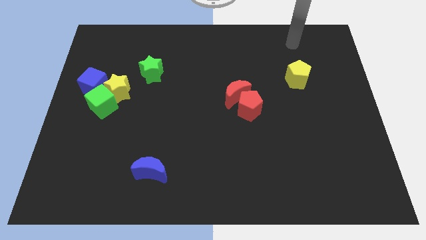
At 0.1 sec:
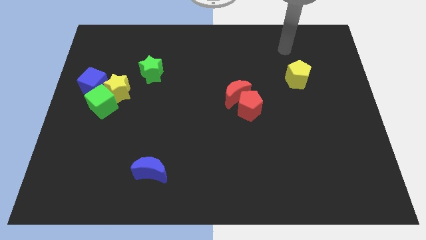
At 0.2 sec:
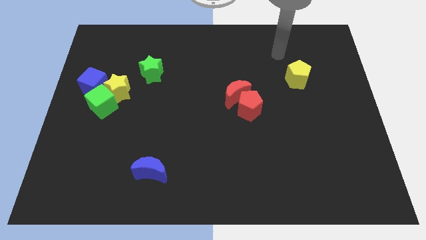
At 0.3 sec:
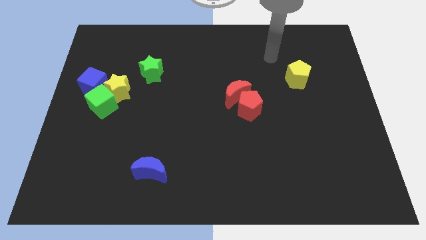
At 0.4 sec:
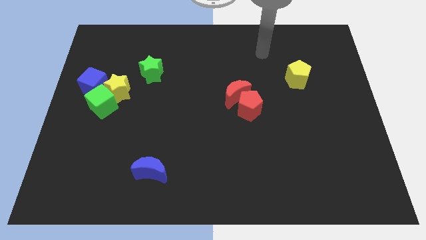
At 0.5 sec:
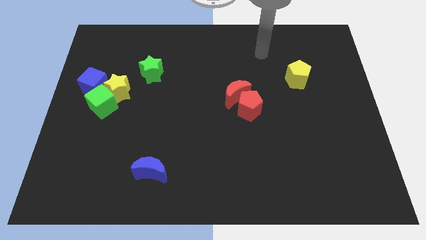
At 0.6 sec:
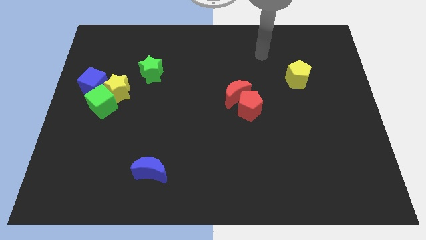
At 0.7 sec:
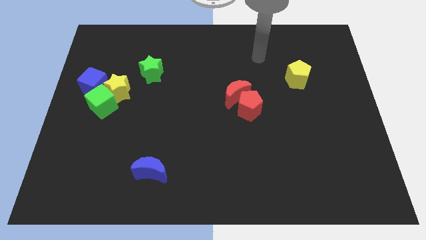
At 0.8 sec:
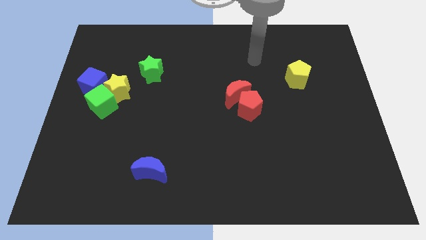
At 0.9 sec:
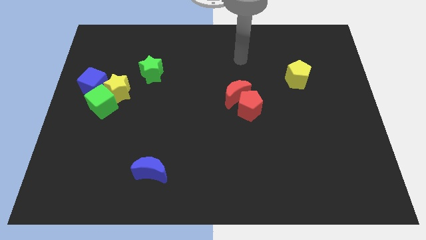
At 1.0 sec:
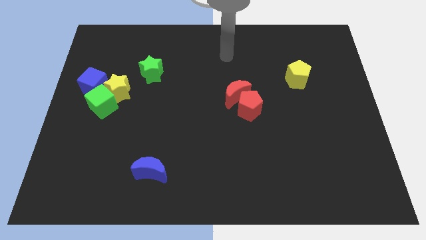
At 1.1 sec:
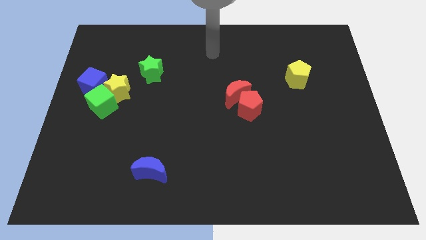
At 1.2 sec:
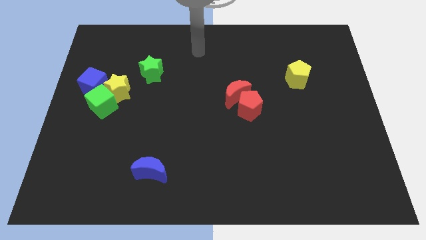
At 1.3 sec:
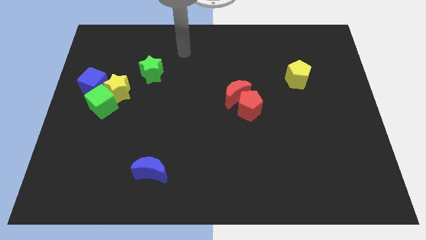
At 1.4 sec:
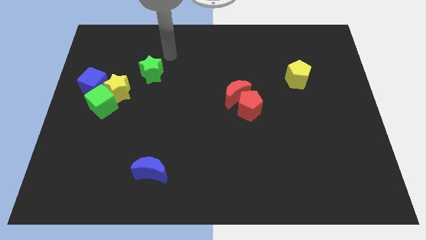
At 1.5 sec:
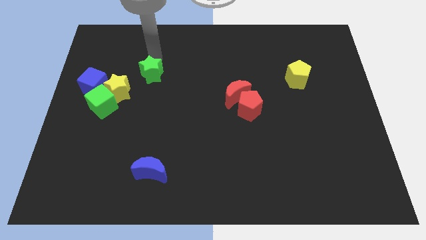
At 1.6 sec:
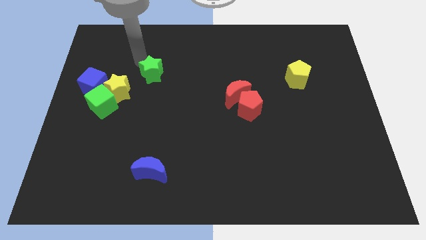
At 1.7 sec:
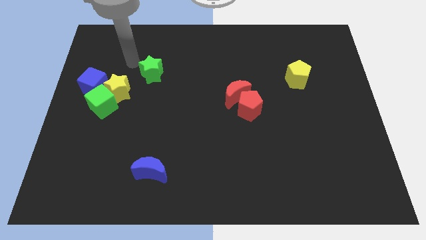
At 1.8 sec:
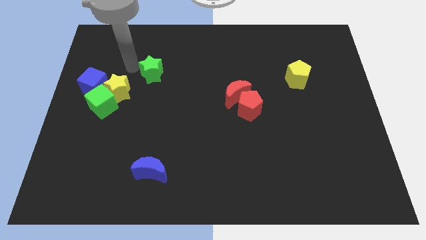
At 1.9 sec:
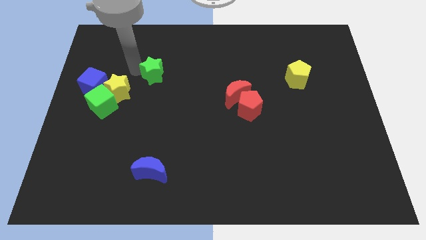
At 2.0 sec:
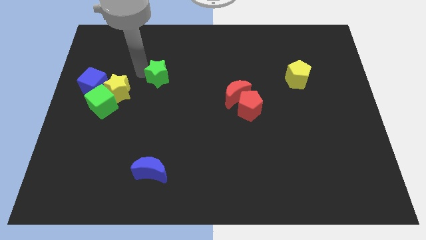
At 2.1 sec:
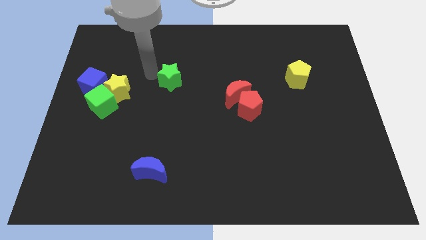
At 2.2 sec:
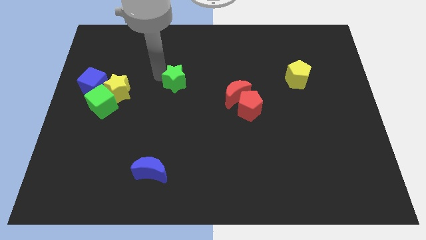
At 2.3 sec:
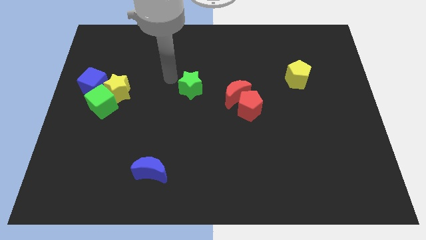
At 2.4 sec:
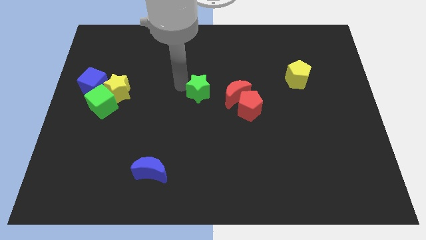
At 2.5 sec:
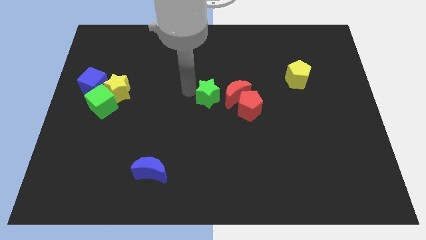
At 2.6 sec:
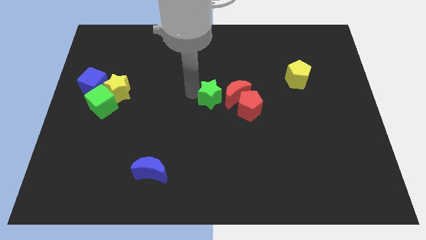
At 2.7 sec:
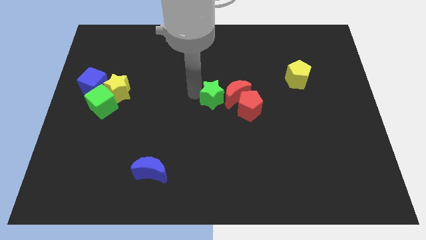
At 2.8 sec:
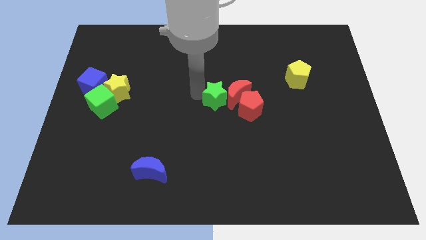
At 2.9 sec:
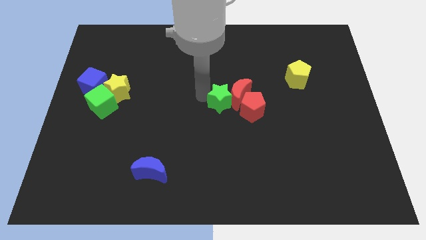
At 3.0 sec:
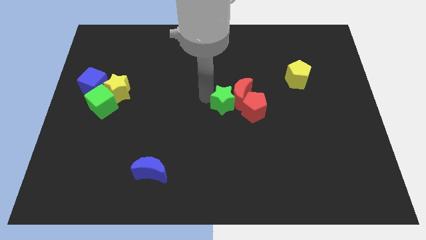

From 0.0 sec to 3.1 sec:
slide green star into the red blocks

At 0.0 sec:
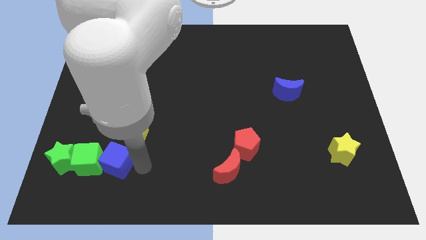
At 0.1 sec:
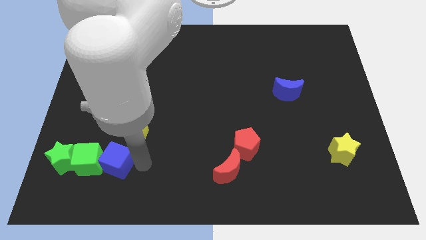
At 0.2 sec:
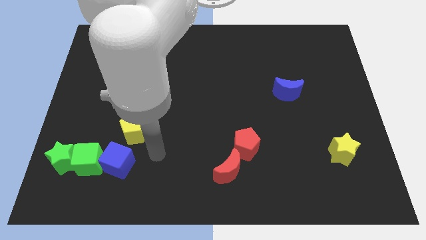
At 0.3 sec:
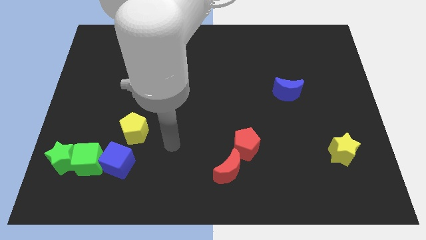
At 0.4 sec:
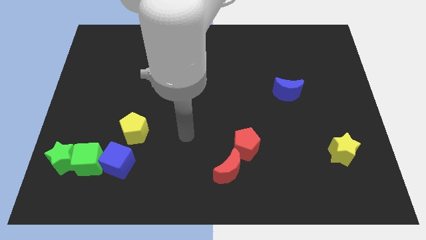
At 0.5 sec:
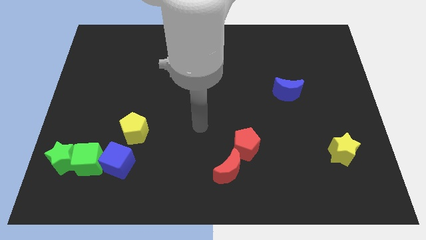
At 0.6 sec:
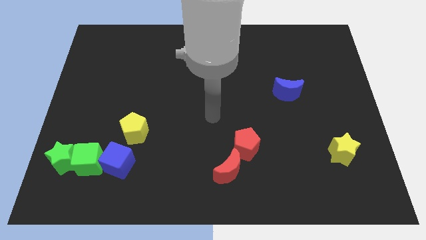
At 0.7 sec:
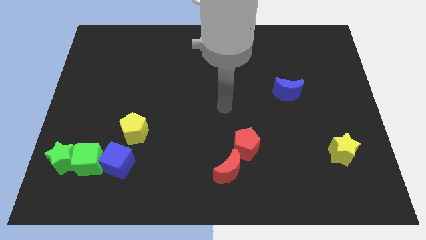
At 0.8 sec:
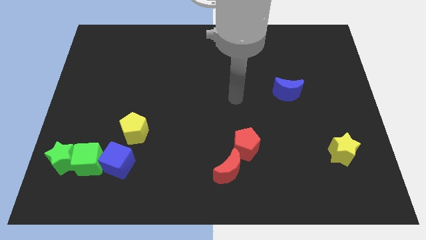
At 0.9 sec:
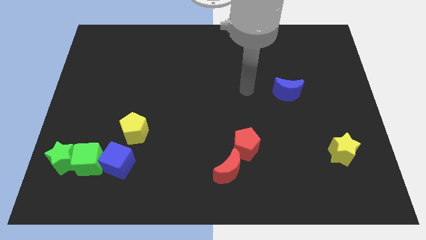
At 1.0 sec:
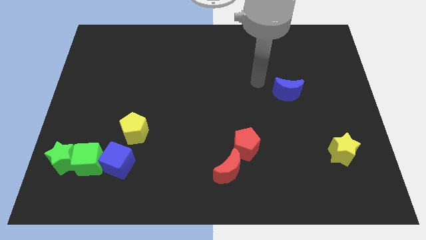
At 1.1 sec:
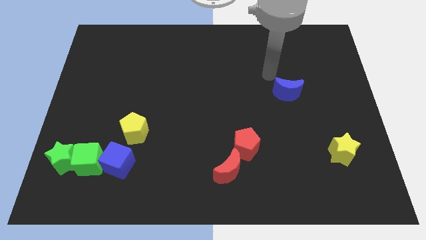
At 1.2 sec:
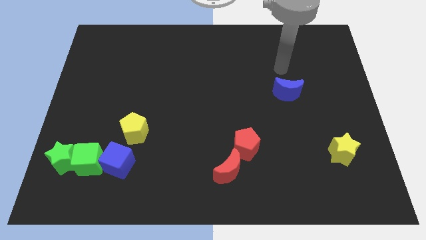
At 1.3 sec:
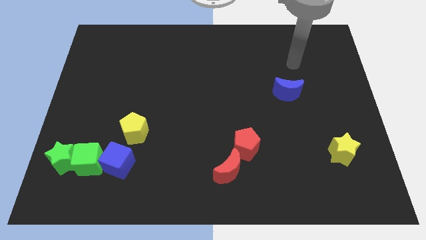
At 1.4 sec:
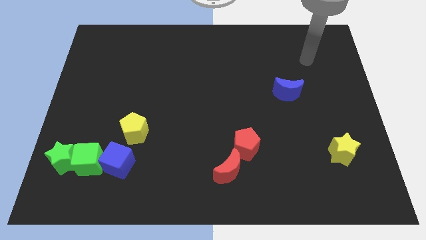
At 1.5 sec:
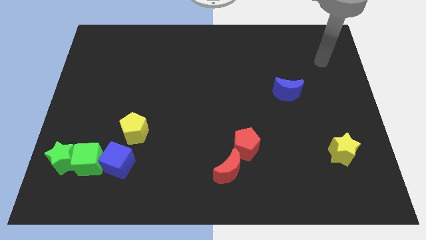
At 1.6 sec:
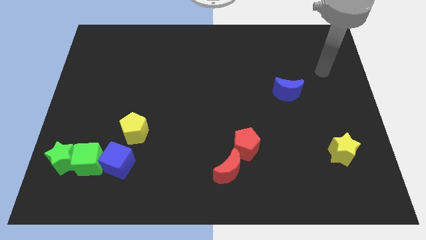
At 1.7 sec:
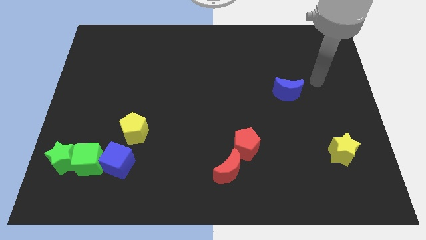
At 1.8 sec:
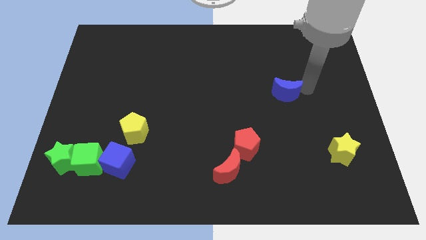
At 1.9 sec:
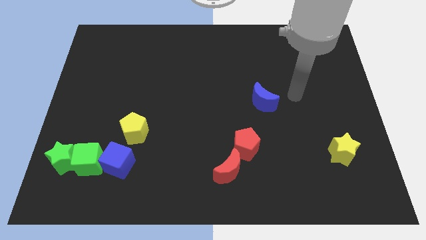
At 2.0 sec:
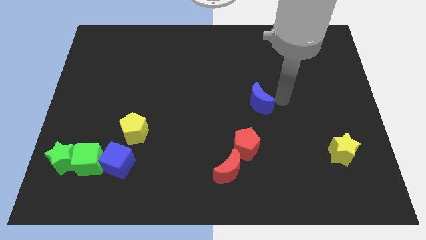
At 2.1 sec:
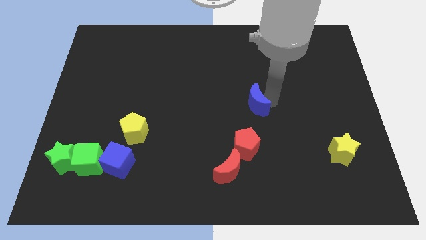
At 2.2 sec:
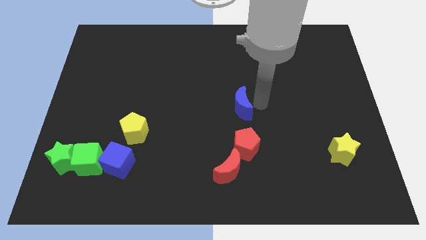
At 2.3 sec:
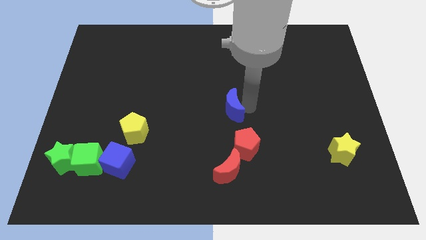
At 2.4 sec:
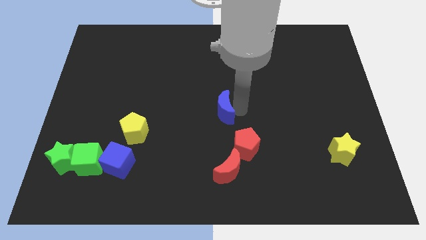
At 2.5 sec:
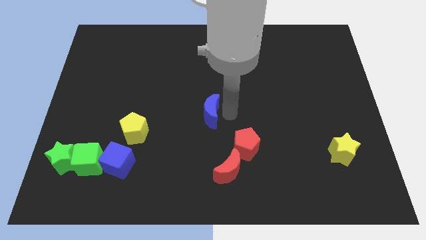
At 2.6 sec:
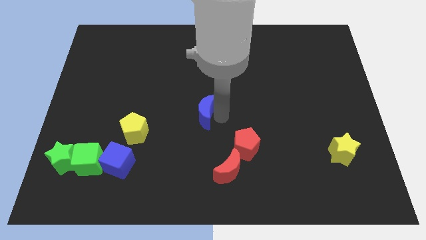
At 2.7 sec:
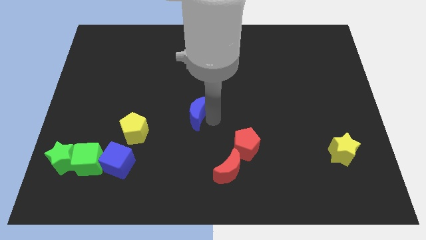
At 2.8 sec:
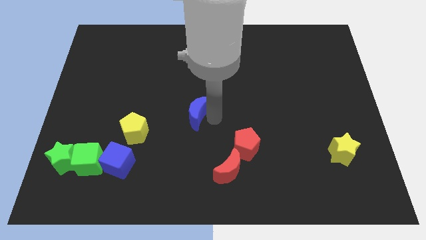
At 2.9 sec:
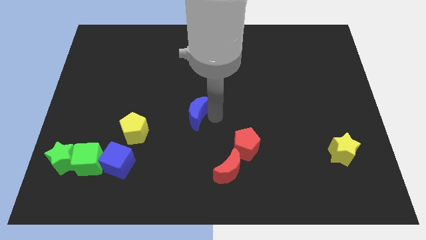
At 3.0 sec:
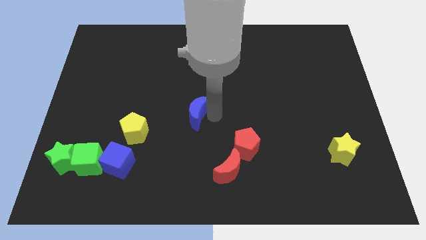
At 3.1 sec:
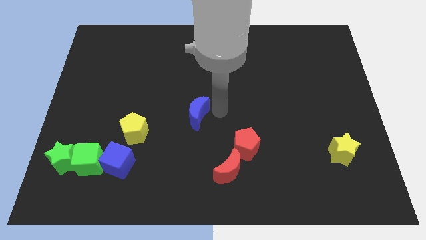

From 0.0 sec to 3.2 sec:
push the blue moon to the center

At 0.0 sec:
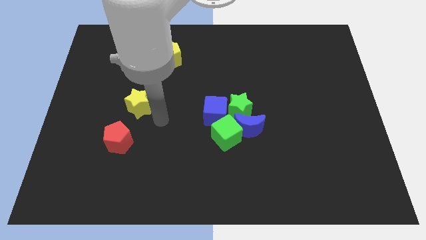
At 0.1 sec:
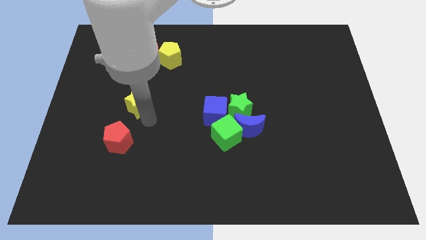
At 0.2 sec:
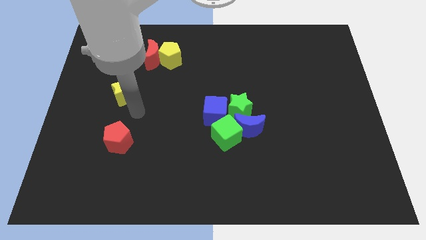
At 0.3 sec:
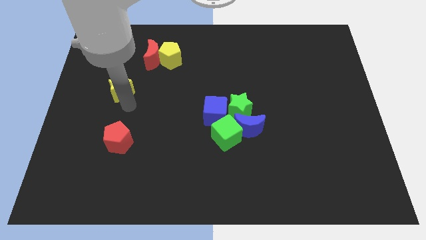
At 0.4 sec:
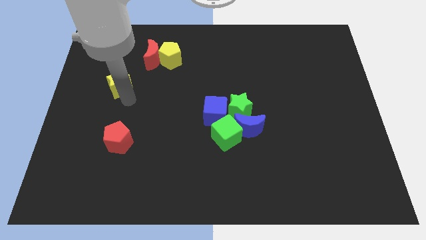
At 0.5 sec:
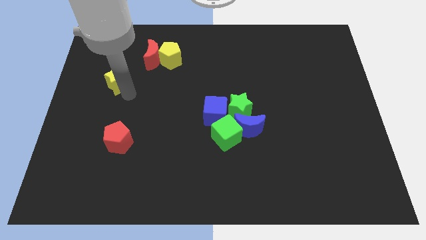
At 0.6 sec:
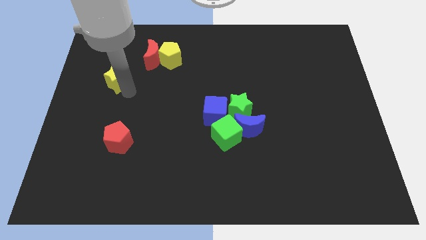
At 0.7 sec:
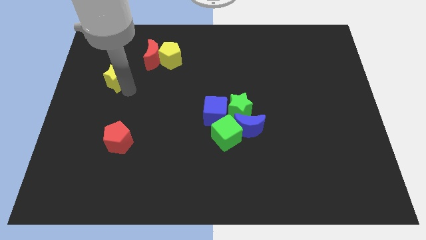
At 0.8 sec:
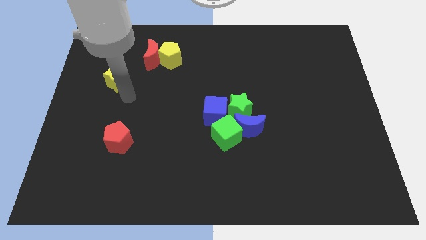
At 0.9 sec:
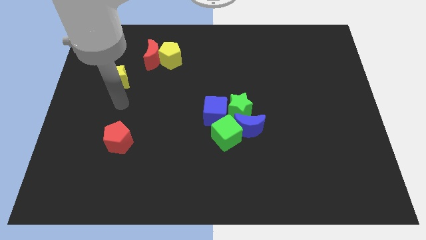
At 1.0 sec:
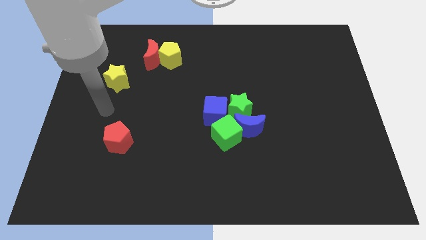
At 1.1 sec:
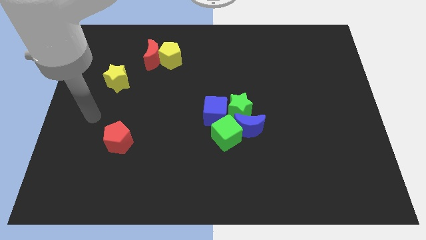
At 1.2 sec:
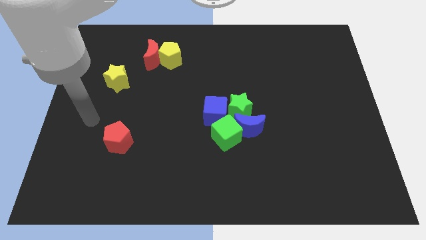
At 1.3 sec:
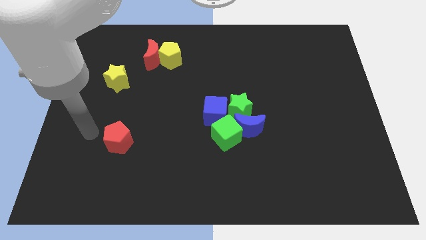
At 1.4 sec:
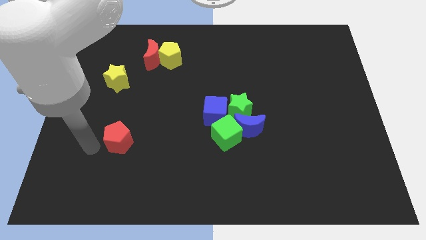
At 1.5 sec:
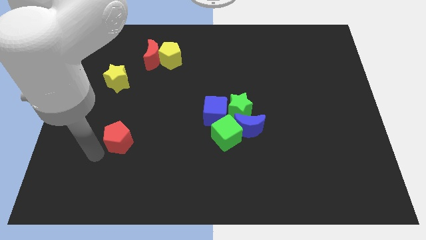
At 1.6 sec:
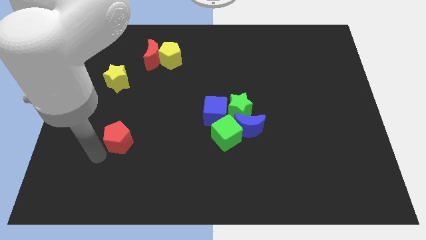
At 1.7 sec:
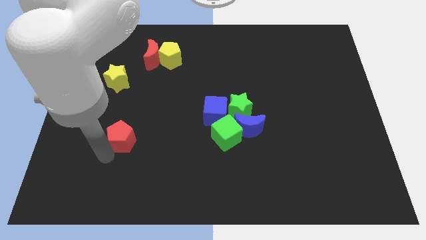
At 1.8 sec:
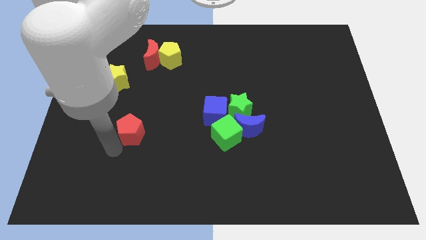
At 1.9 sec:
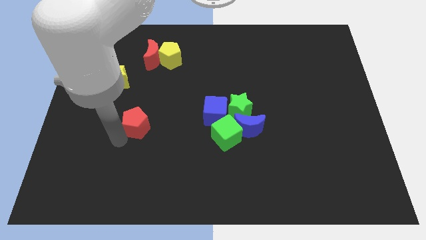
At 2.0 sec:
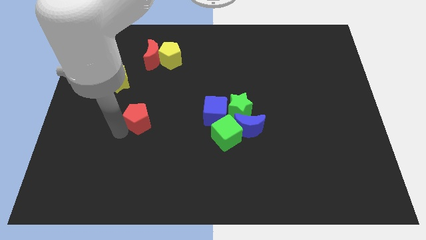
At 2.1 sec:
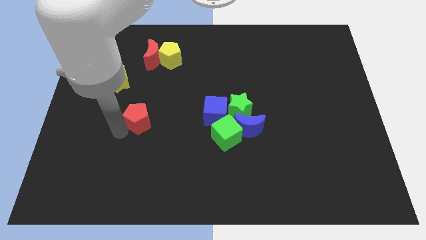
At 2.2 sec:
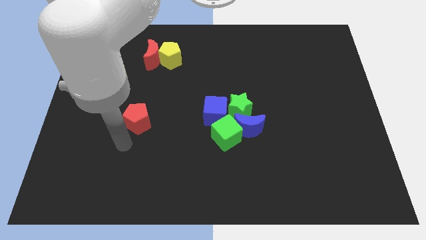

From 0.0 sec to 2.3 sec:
move red pentagon slightly upwards

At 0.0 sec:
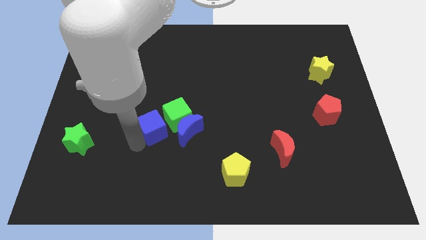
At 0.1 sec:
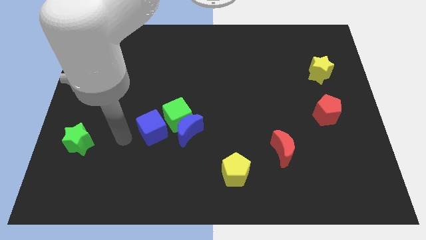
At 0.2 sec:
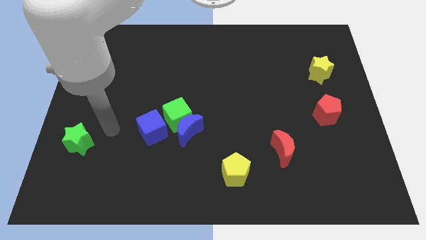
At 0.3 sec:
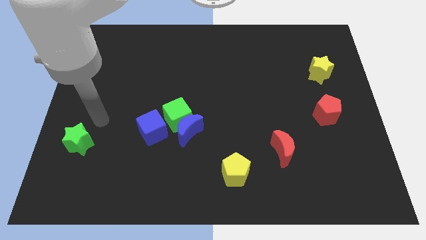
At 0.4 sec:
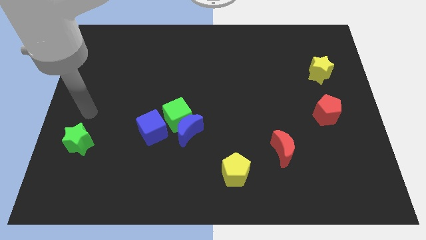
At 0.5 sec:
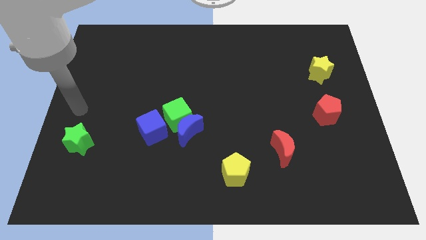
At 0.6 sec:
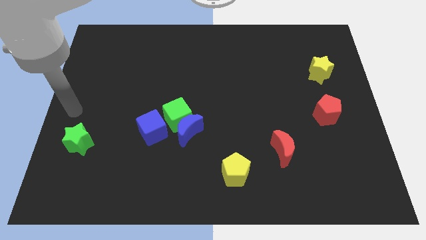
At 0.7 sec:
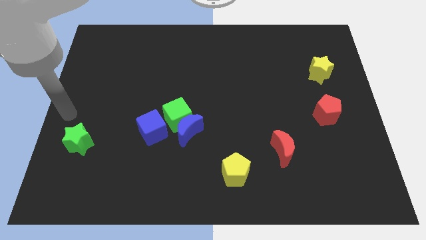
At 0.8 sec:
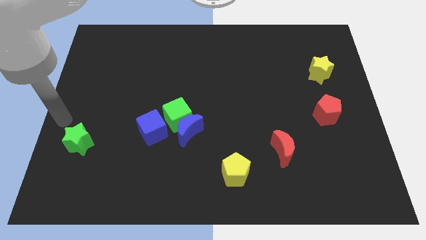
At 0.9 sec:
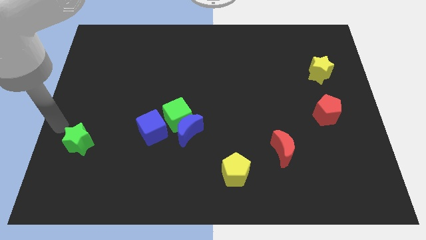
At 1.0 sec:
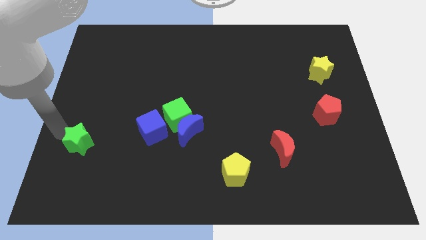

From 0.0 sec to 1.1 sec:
move your arm to the left of the green star
